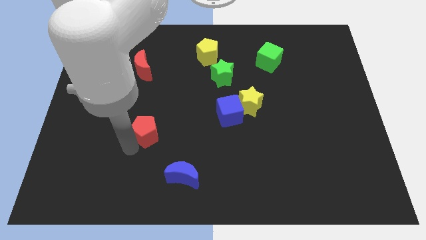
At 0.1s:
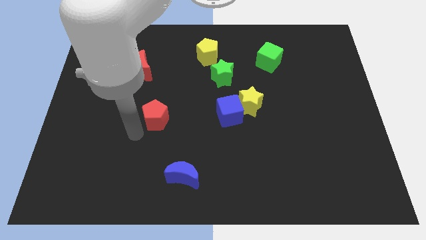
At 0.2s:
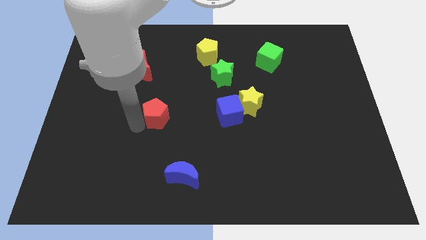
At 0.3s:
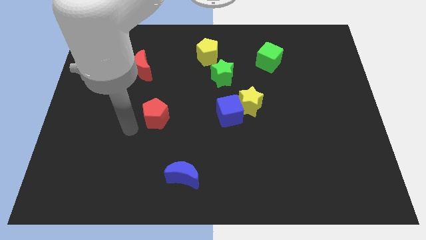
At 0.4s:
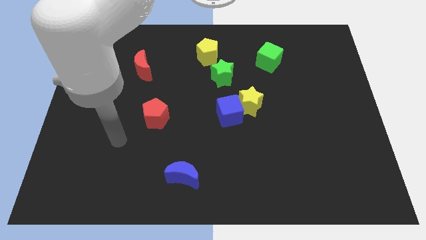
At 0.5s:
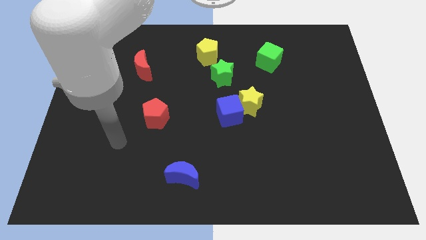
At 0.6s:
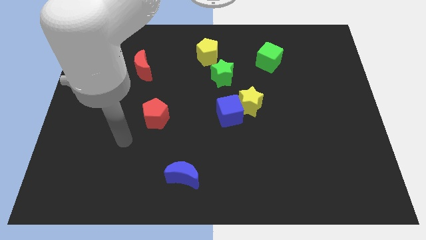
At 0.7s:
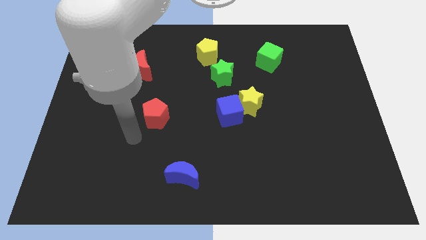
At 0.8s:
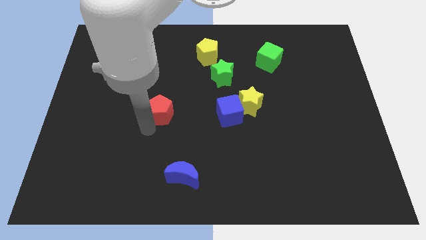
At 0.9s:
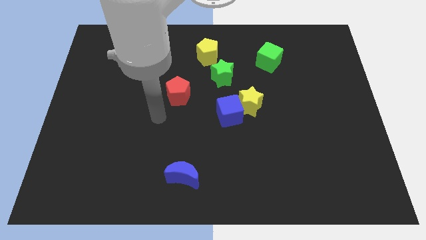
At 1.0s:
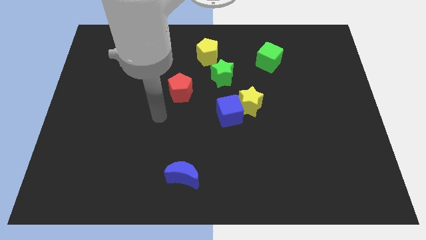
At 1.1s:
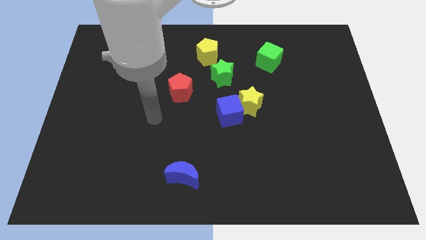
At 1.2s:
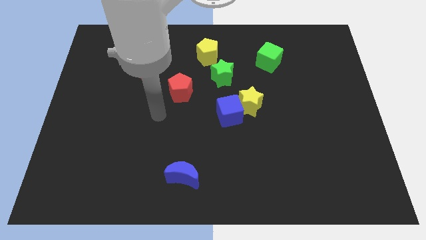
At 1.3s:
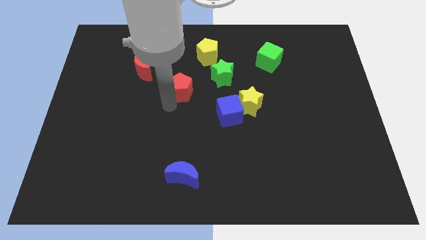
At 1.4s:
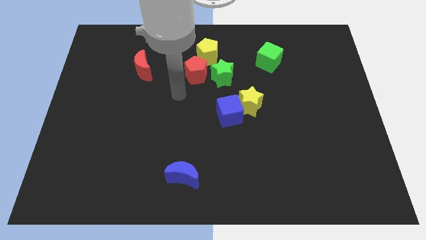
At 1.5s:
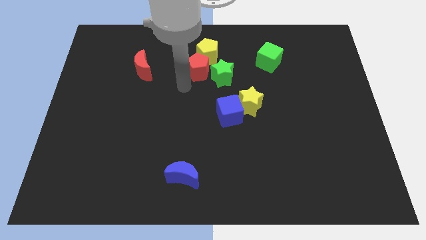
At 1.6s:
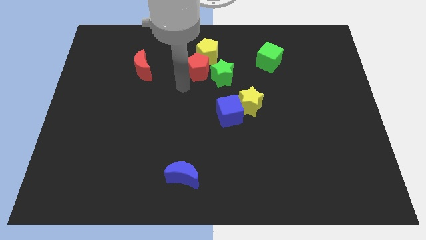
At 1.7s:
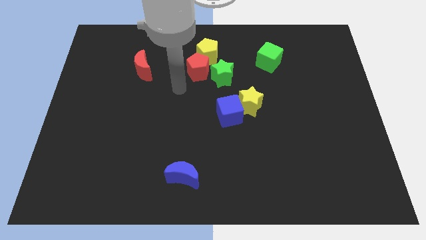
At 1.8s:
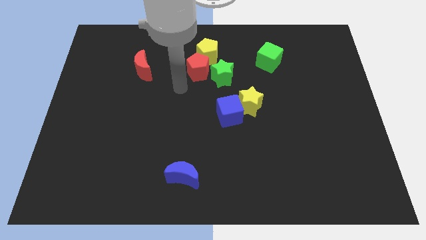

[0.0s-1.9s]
place the red pentagon to the left bottom side of the yellow pentagon

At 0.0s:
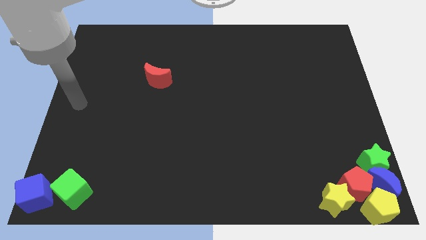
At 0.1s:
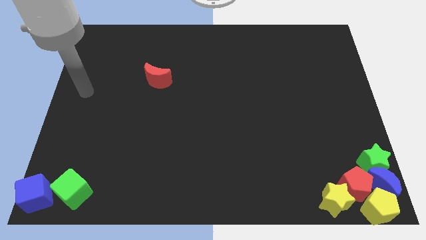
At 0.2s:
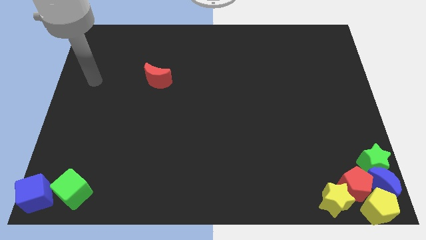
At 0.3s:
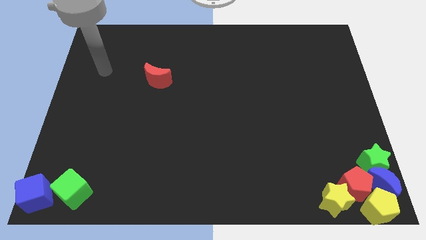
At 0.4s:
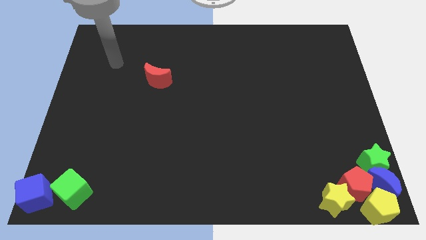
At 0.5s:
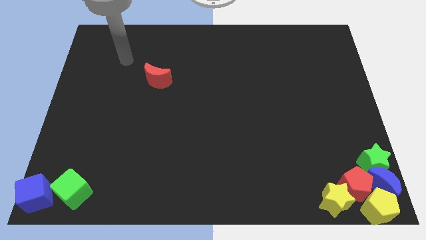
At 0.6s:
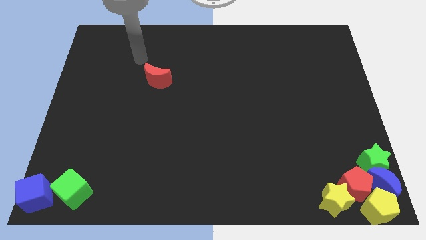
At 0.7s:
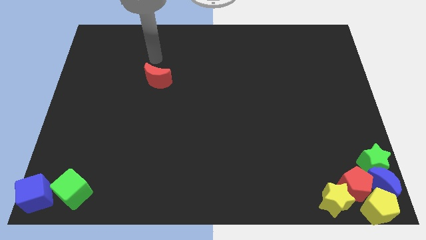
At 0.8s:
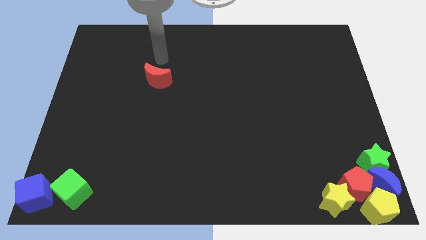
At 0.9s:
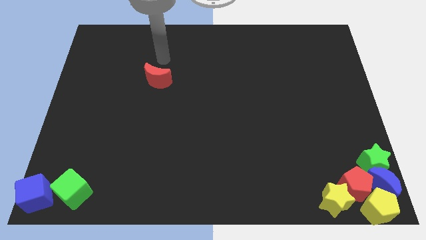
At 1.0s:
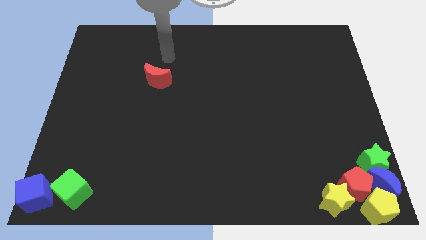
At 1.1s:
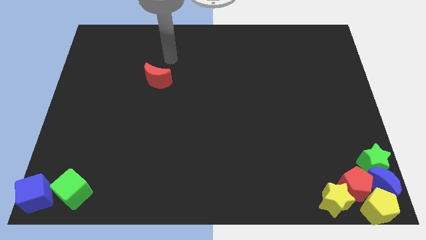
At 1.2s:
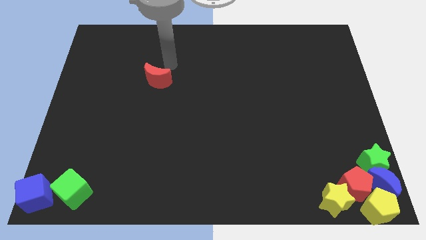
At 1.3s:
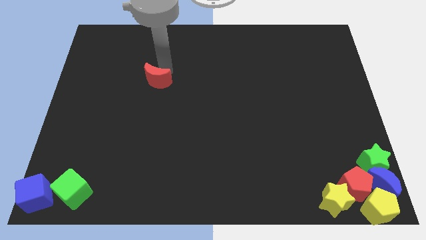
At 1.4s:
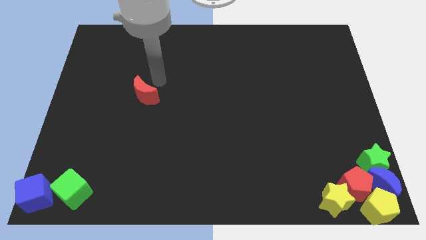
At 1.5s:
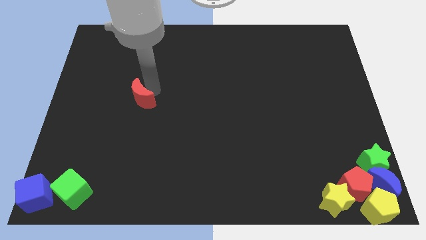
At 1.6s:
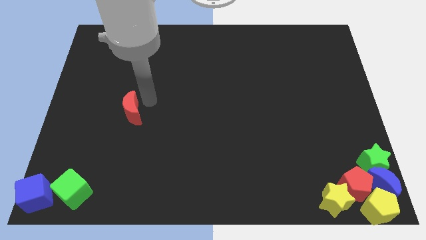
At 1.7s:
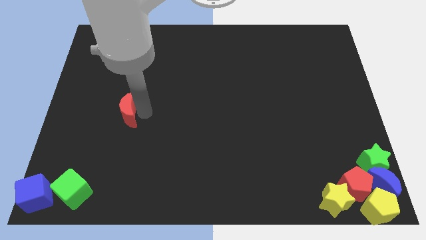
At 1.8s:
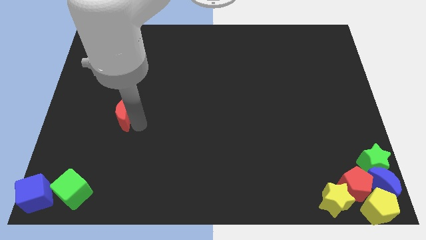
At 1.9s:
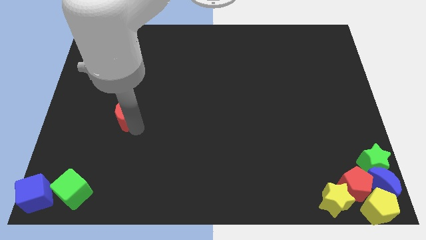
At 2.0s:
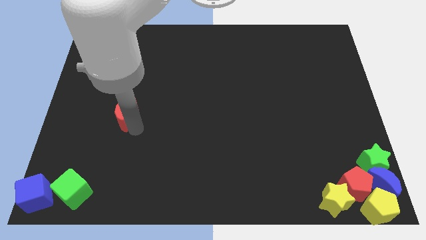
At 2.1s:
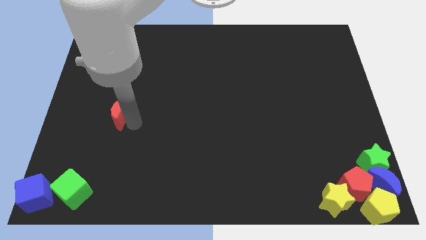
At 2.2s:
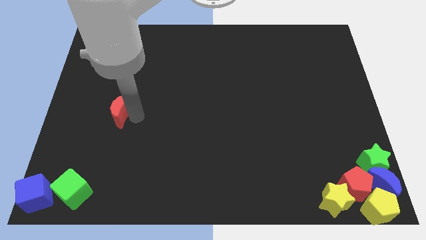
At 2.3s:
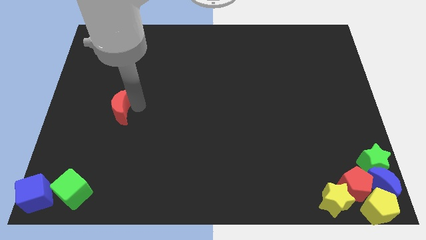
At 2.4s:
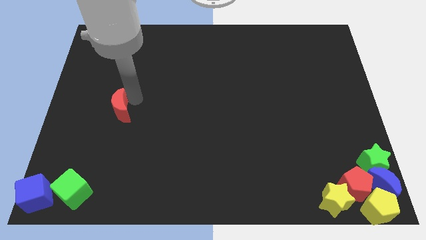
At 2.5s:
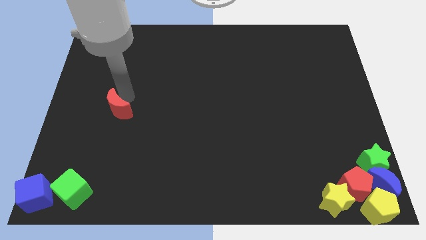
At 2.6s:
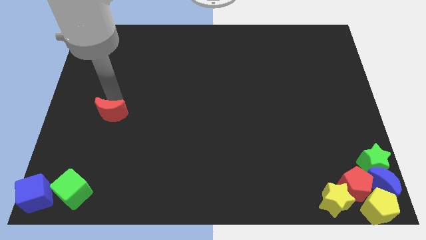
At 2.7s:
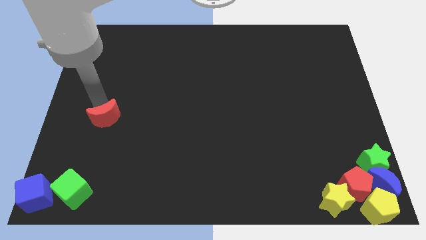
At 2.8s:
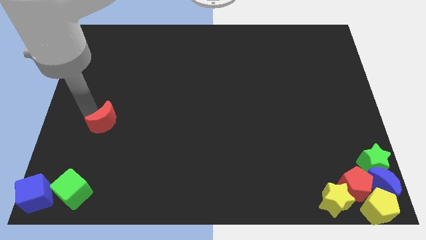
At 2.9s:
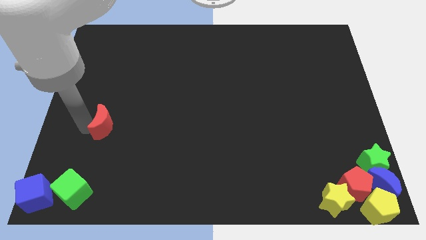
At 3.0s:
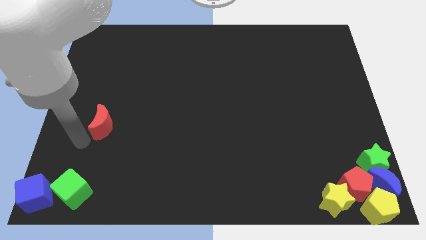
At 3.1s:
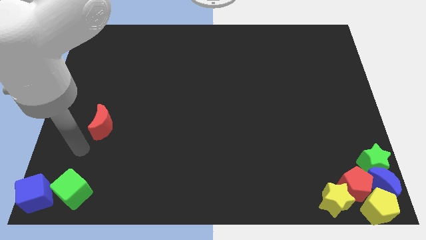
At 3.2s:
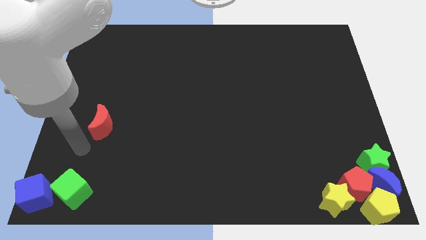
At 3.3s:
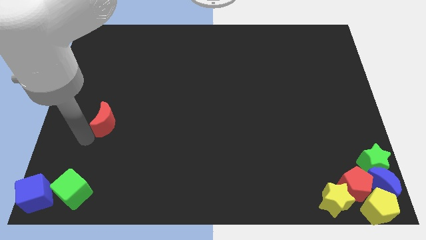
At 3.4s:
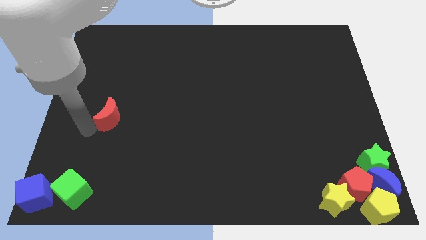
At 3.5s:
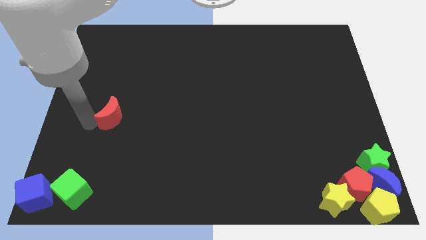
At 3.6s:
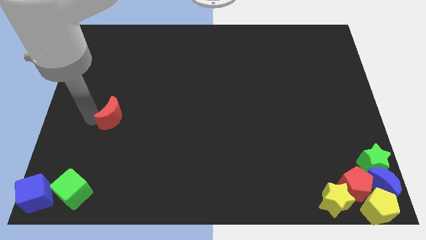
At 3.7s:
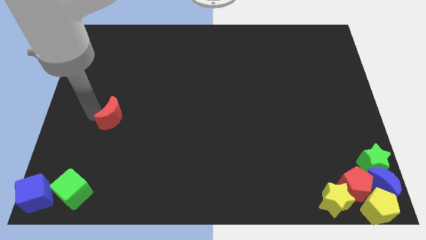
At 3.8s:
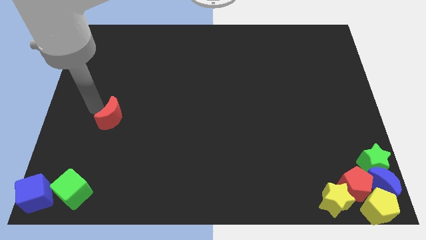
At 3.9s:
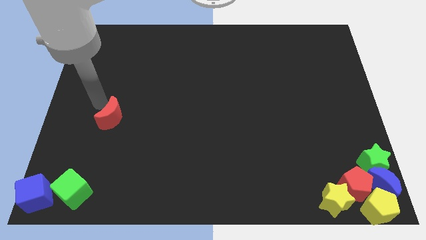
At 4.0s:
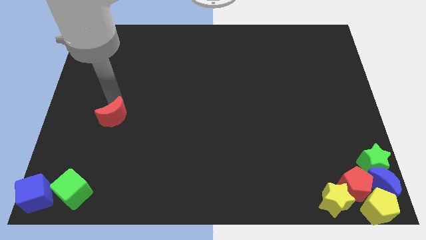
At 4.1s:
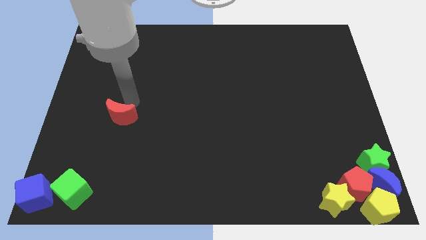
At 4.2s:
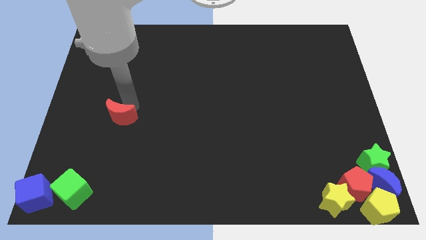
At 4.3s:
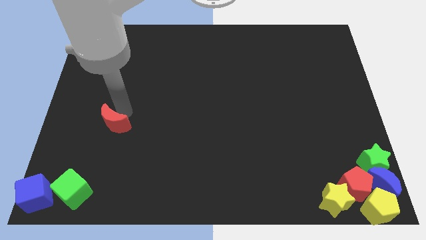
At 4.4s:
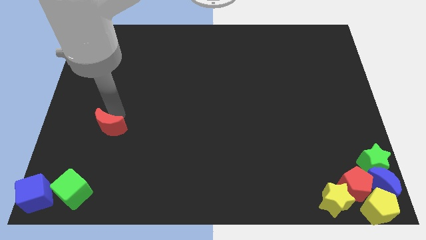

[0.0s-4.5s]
place the red moon diagonally top right to the blue cube

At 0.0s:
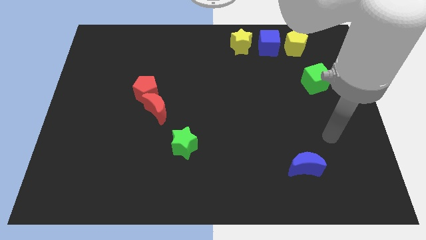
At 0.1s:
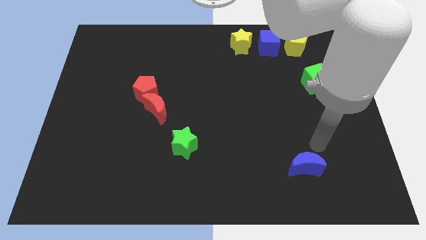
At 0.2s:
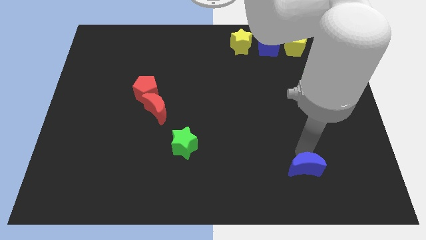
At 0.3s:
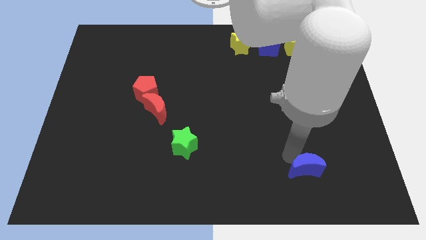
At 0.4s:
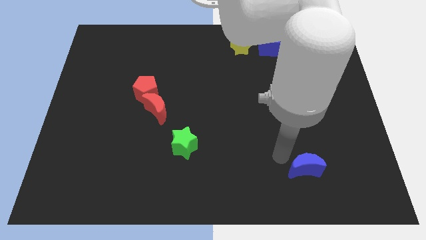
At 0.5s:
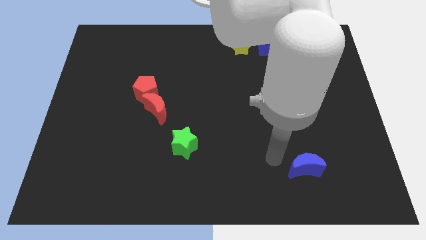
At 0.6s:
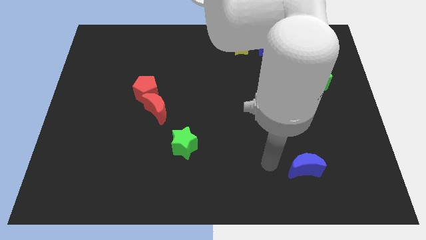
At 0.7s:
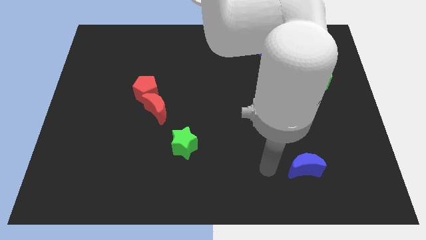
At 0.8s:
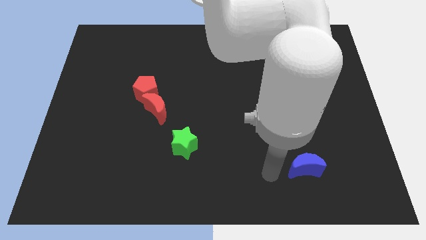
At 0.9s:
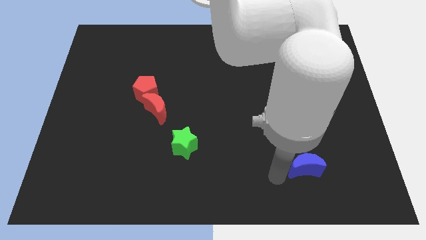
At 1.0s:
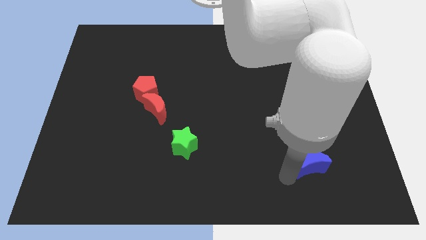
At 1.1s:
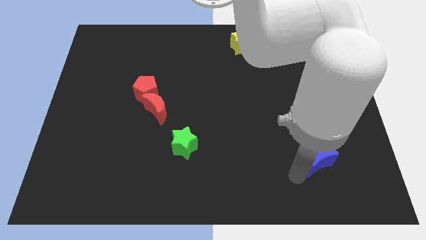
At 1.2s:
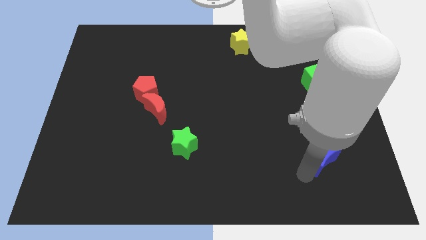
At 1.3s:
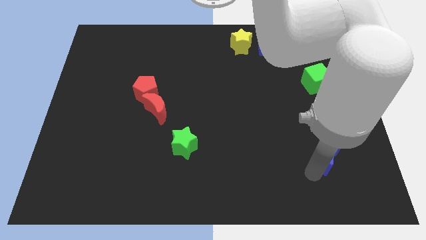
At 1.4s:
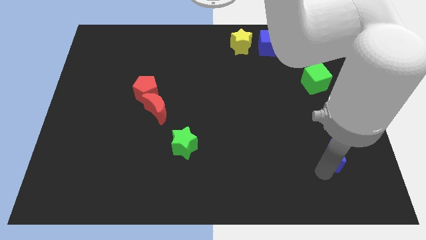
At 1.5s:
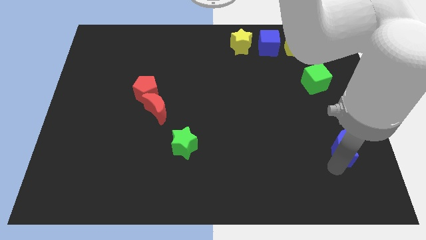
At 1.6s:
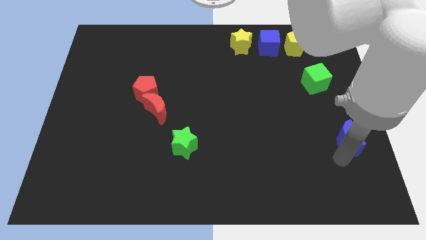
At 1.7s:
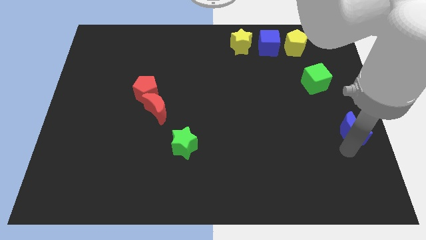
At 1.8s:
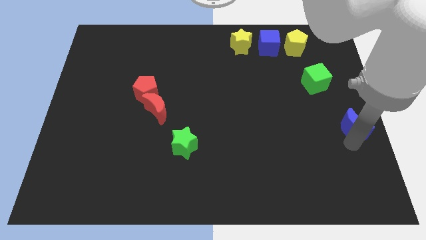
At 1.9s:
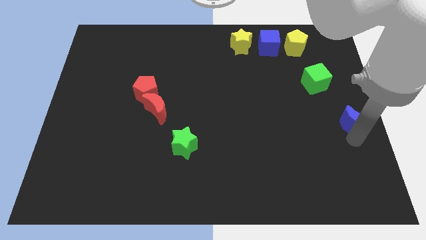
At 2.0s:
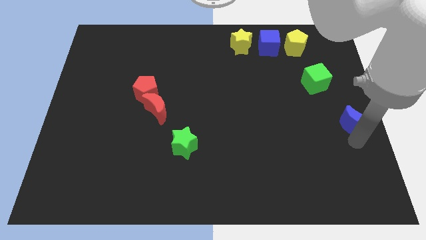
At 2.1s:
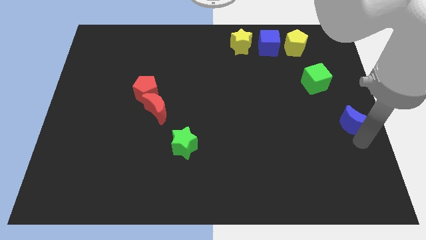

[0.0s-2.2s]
move the blue moon towards the top right

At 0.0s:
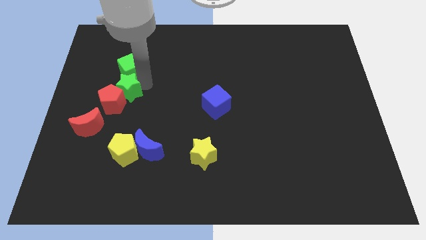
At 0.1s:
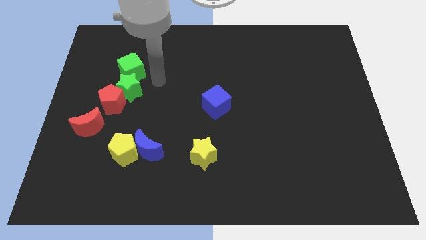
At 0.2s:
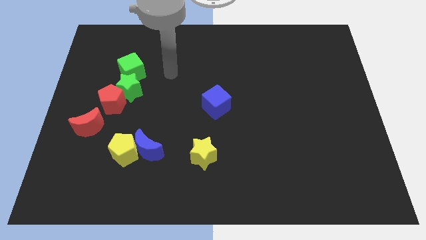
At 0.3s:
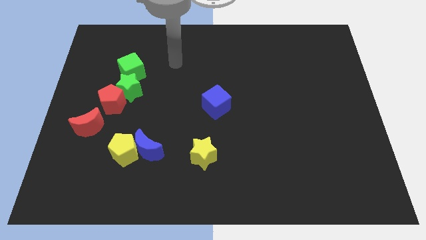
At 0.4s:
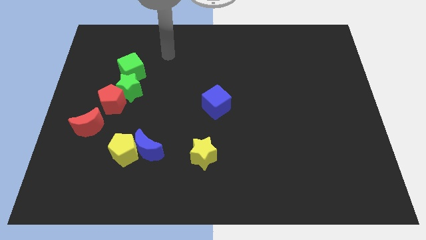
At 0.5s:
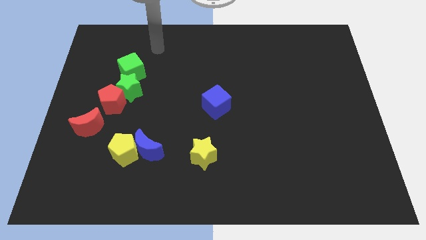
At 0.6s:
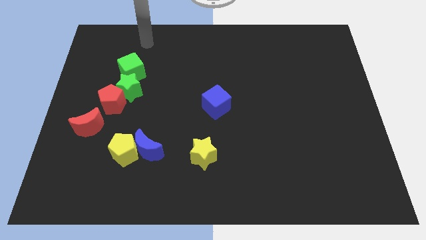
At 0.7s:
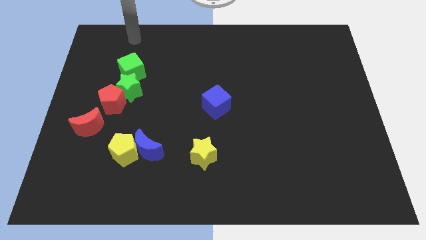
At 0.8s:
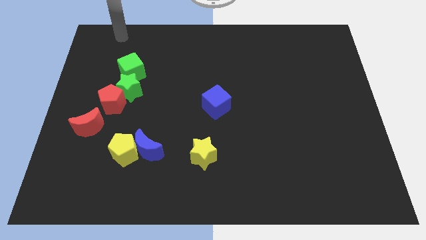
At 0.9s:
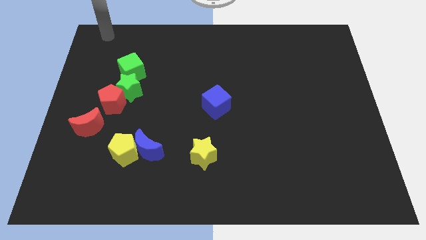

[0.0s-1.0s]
move your arm away from the green star
